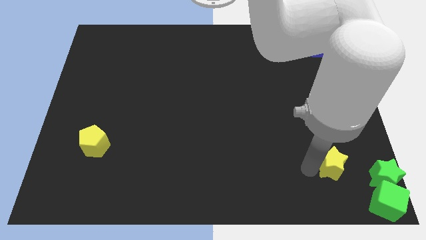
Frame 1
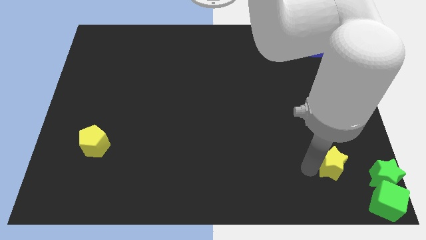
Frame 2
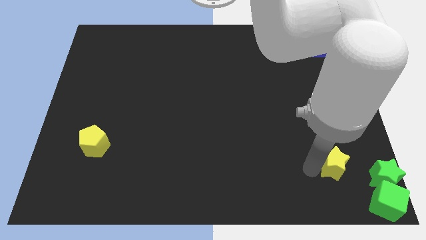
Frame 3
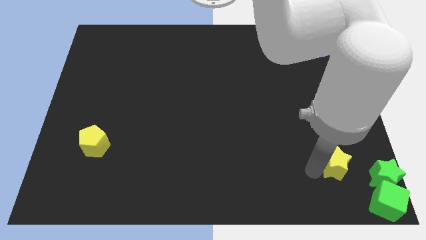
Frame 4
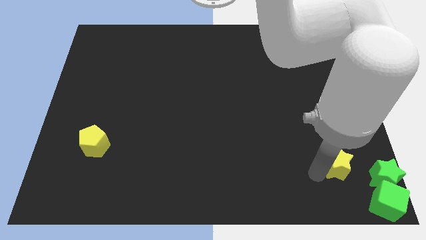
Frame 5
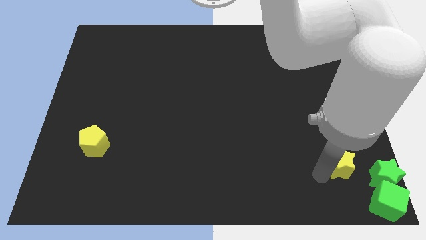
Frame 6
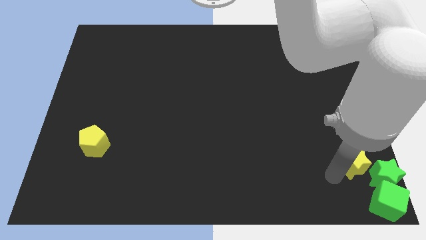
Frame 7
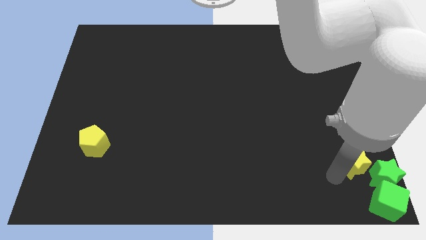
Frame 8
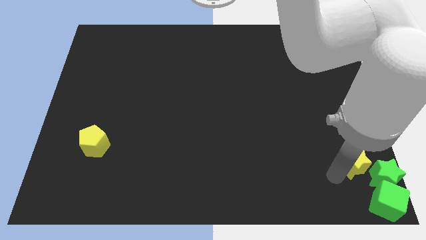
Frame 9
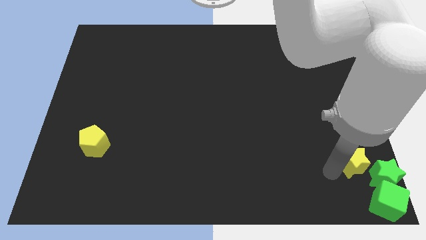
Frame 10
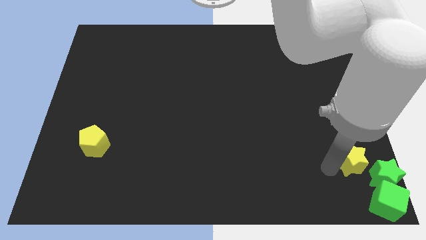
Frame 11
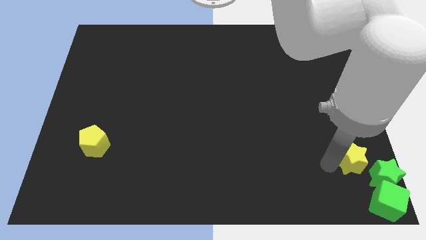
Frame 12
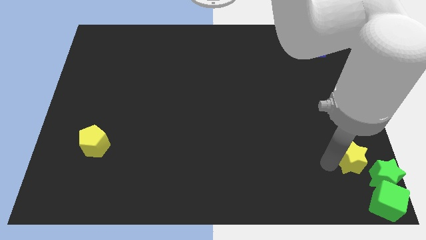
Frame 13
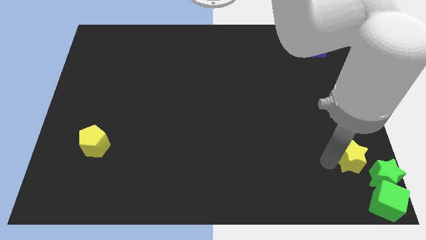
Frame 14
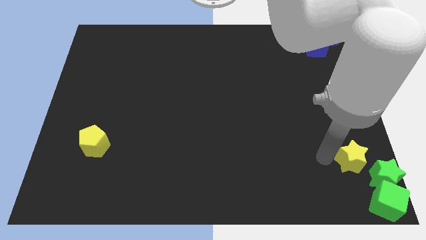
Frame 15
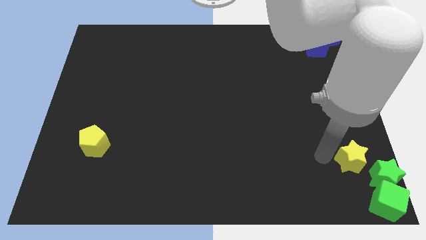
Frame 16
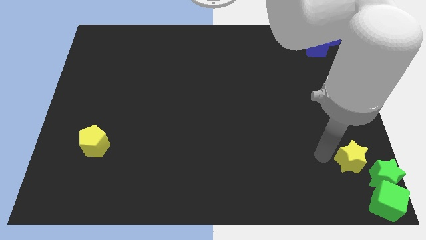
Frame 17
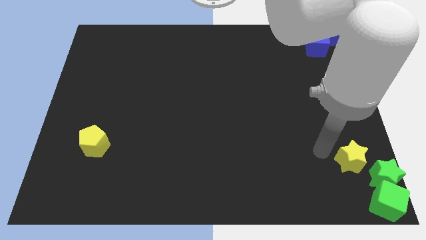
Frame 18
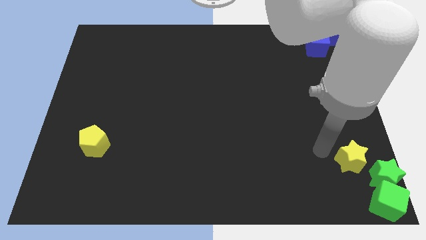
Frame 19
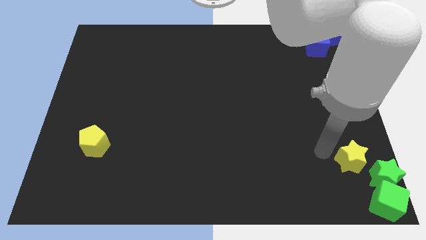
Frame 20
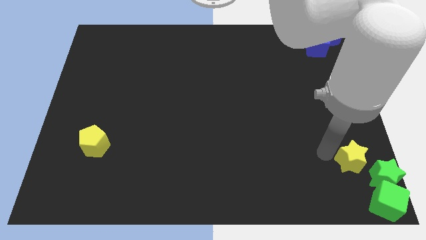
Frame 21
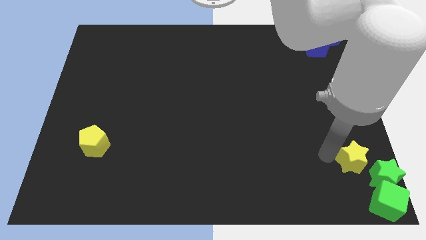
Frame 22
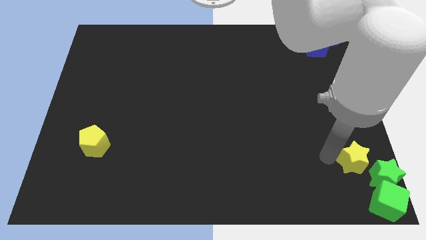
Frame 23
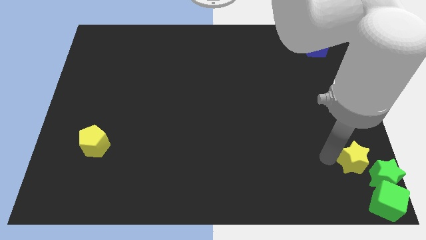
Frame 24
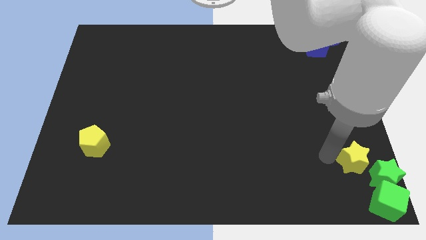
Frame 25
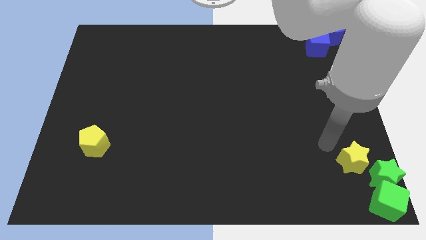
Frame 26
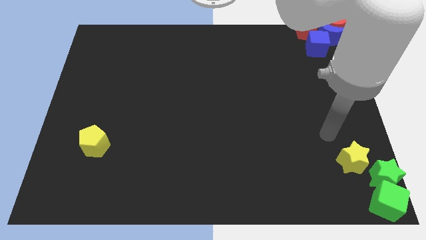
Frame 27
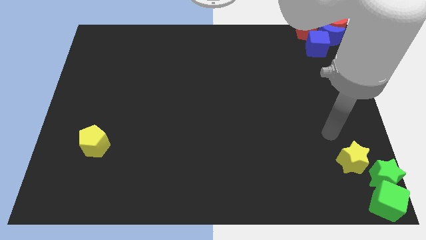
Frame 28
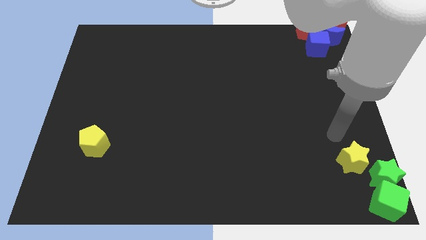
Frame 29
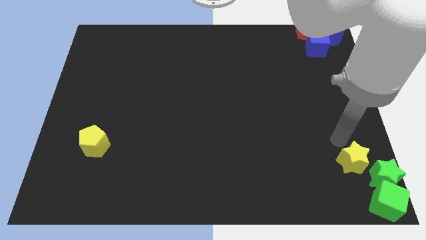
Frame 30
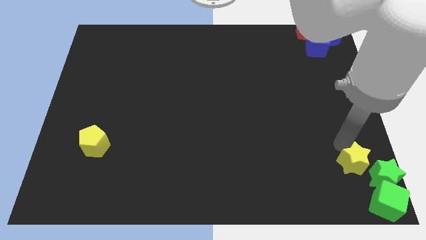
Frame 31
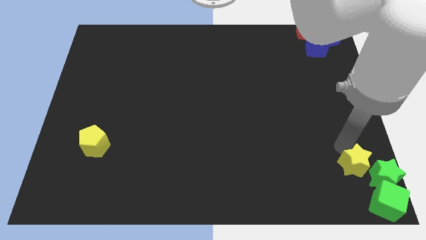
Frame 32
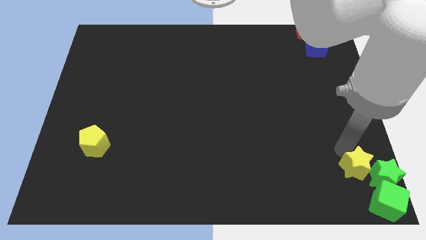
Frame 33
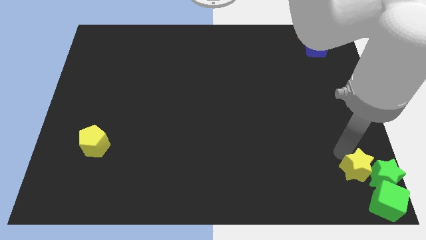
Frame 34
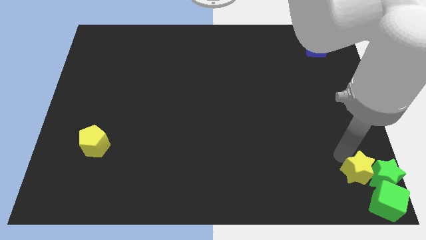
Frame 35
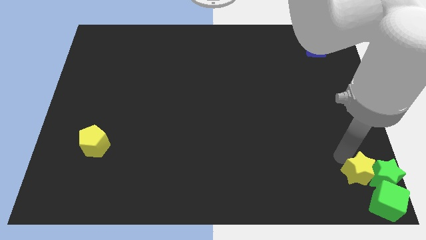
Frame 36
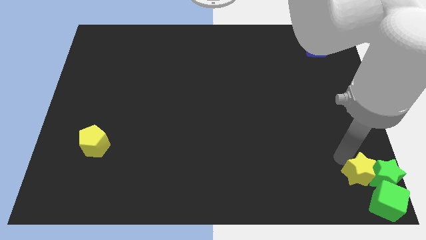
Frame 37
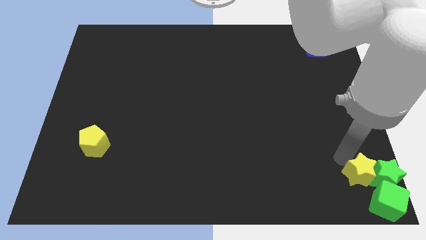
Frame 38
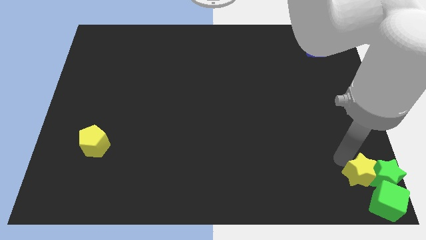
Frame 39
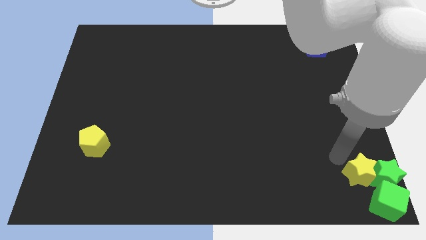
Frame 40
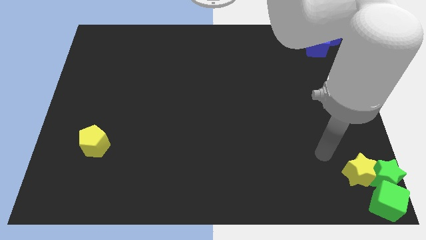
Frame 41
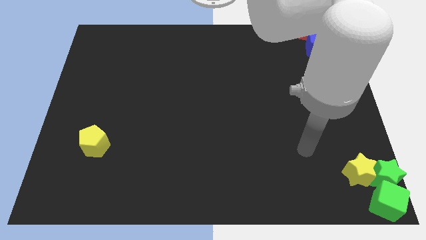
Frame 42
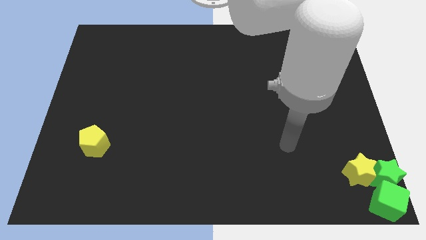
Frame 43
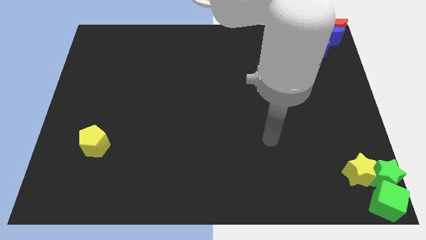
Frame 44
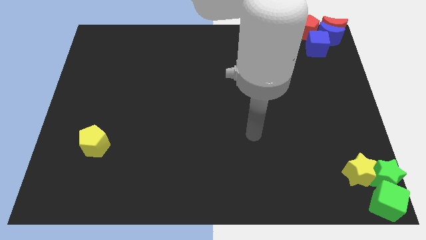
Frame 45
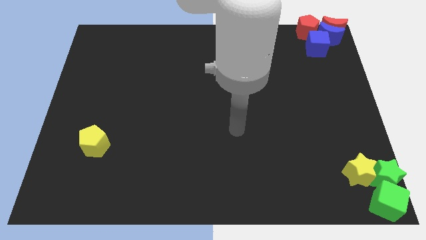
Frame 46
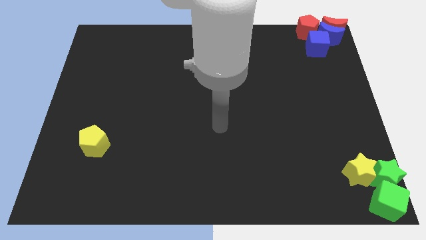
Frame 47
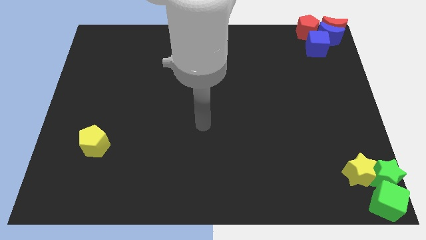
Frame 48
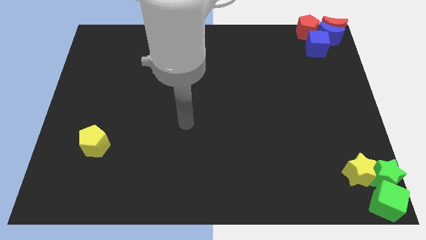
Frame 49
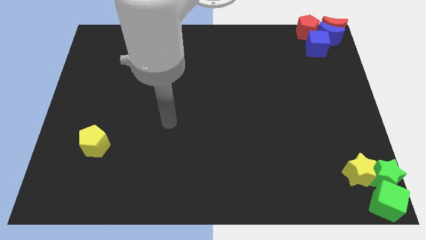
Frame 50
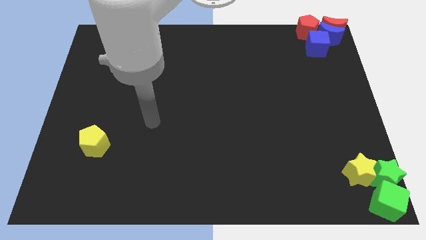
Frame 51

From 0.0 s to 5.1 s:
place the yellow star towards beside the green star

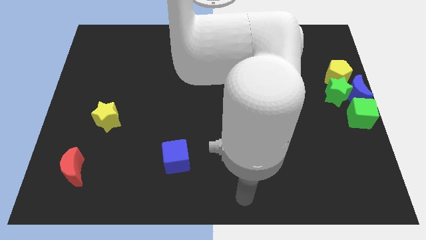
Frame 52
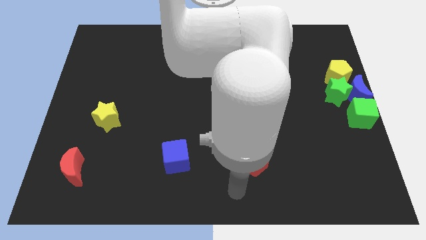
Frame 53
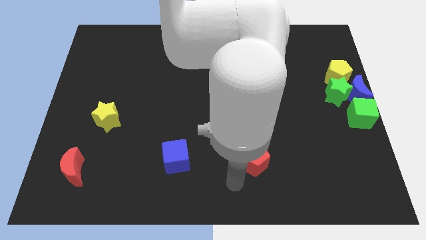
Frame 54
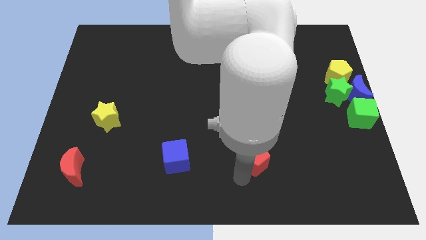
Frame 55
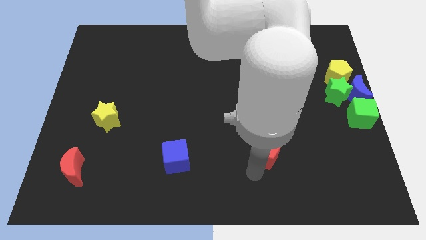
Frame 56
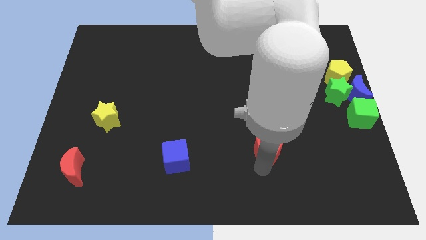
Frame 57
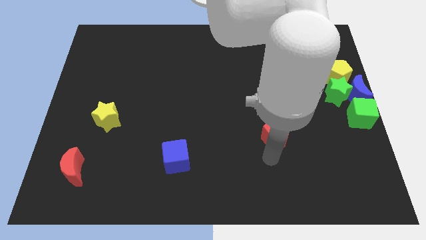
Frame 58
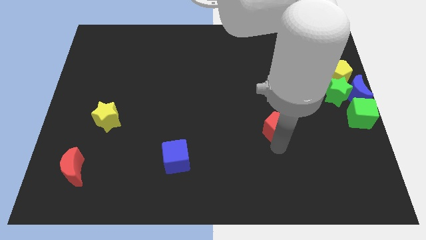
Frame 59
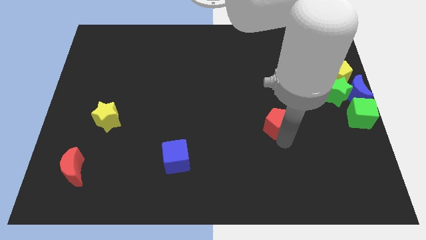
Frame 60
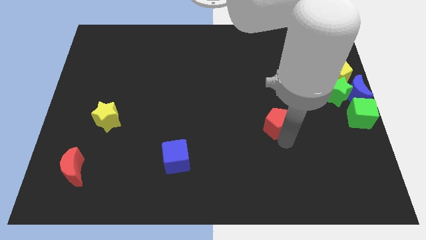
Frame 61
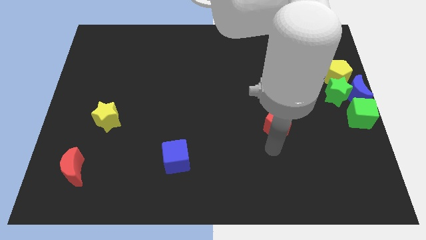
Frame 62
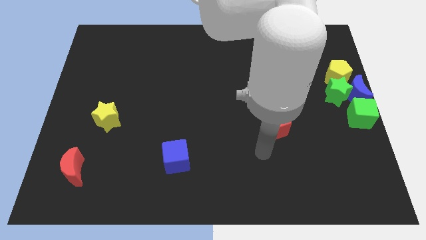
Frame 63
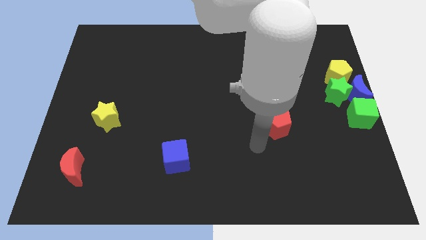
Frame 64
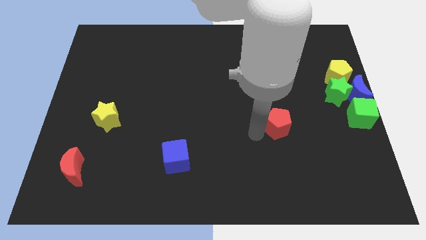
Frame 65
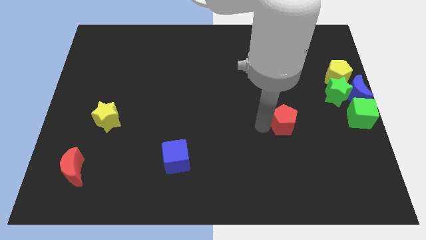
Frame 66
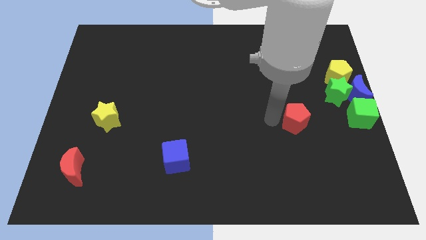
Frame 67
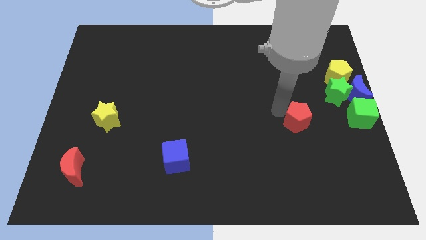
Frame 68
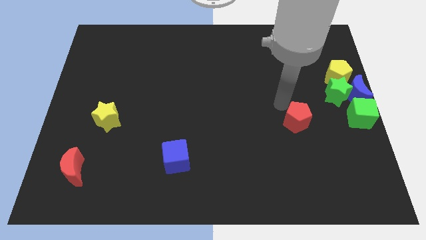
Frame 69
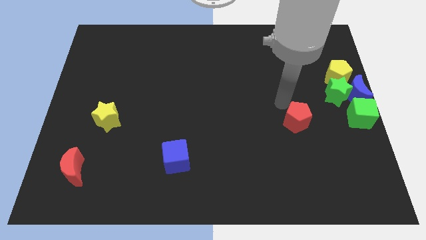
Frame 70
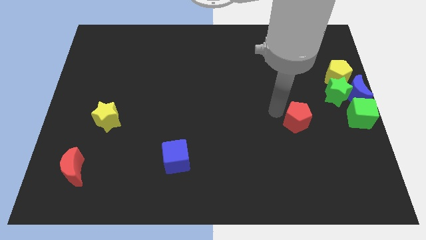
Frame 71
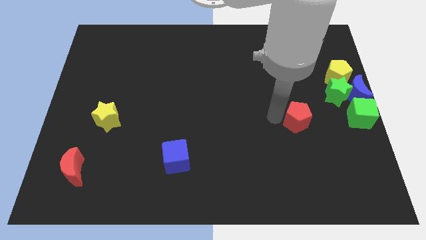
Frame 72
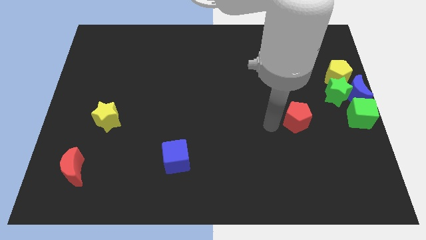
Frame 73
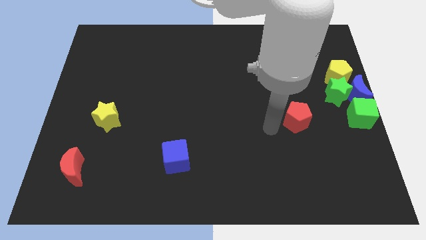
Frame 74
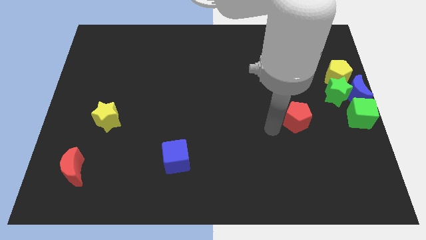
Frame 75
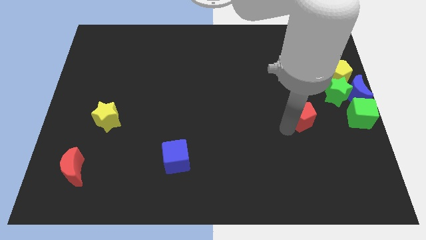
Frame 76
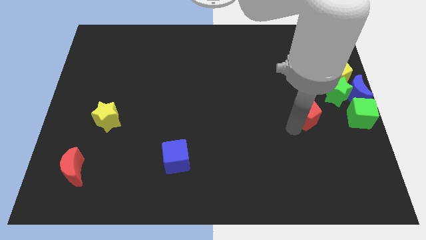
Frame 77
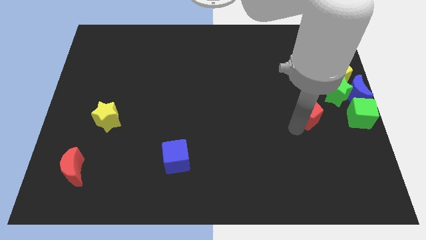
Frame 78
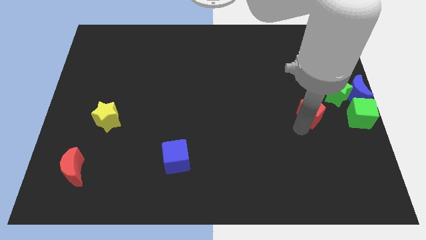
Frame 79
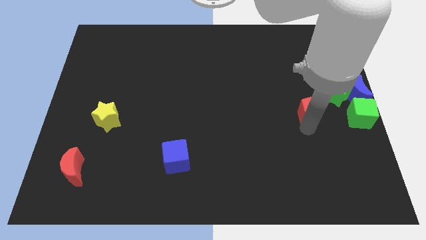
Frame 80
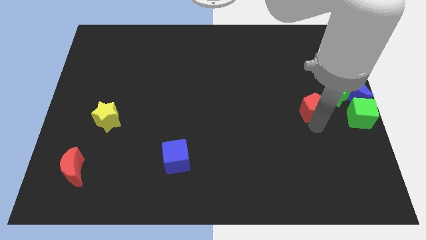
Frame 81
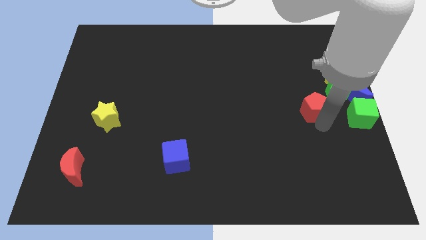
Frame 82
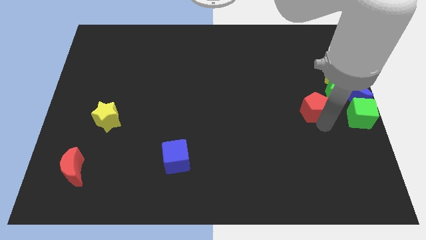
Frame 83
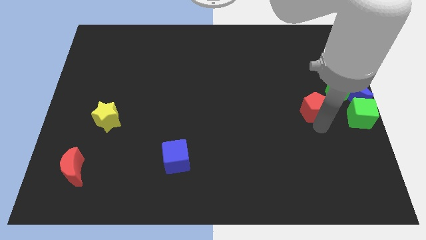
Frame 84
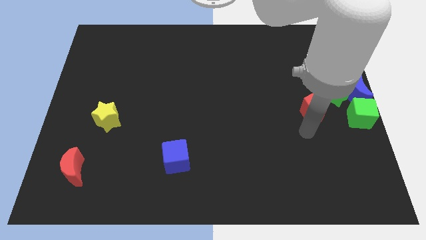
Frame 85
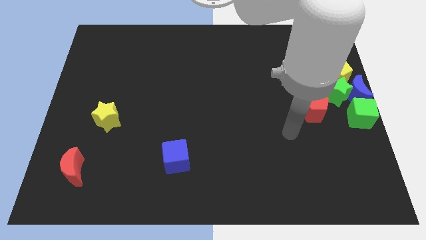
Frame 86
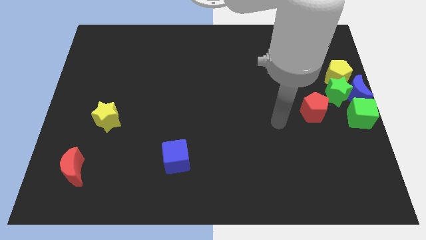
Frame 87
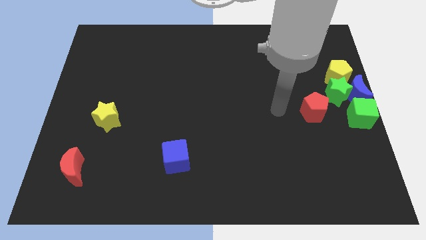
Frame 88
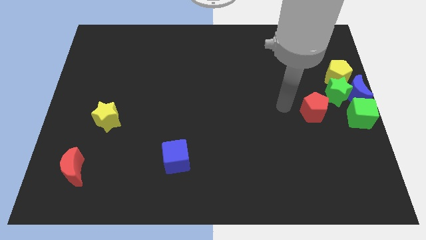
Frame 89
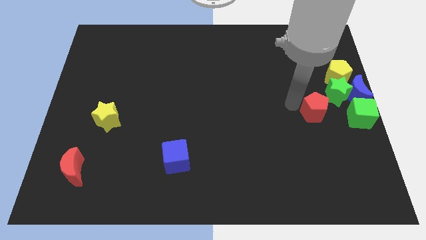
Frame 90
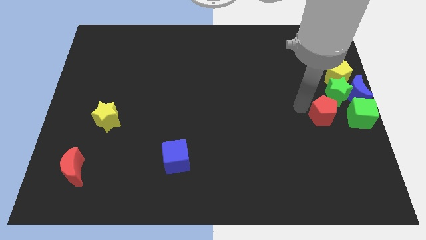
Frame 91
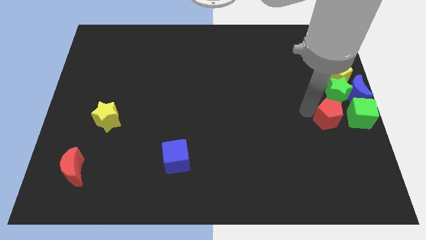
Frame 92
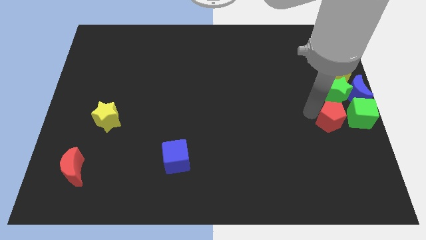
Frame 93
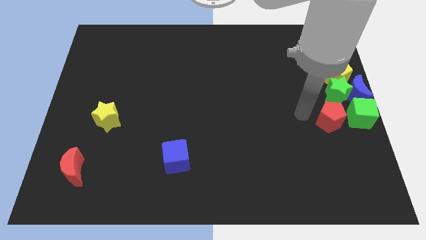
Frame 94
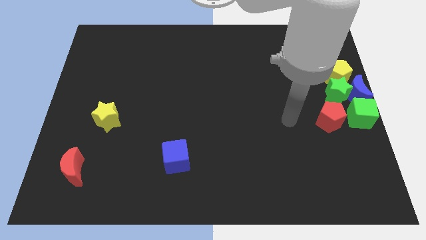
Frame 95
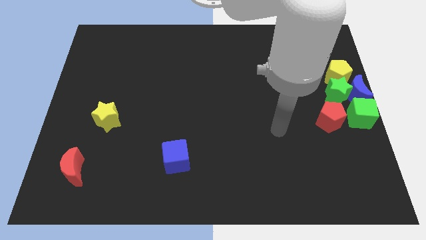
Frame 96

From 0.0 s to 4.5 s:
place the red pentagon to the bottom of the green star
